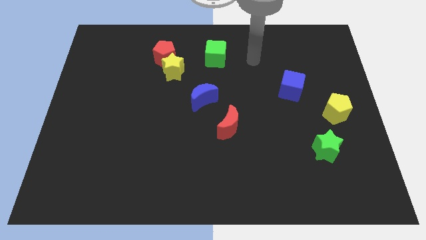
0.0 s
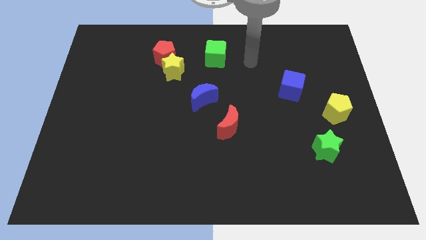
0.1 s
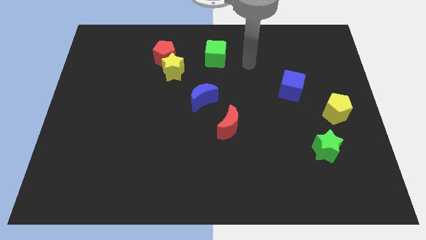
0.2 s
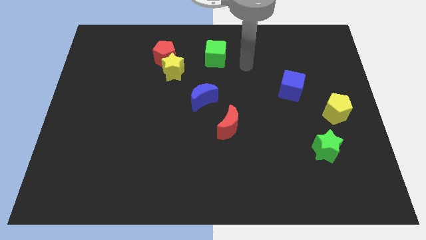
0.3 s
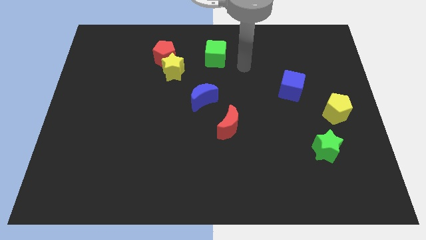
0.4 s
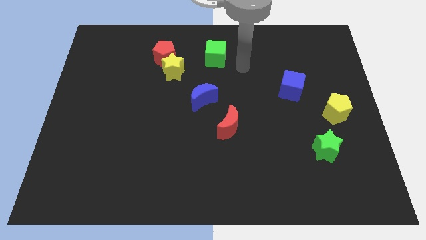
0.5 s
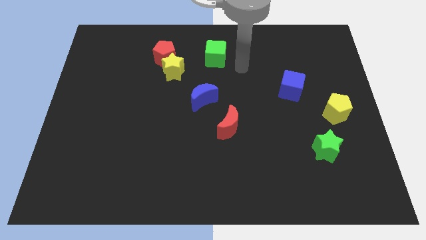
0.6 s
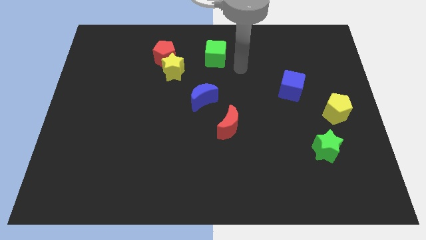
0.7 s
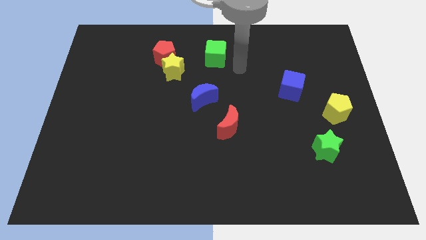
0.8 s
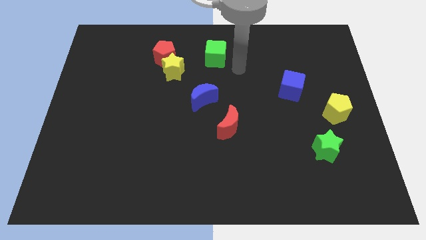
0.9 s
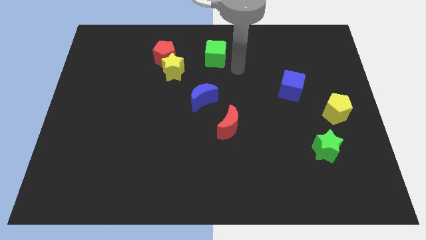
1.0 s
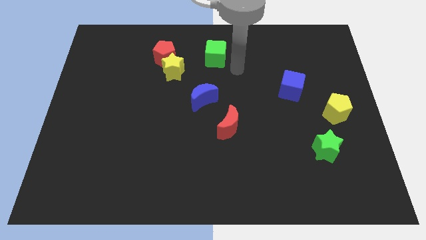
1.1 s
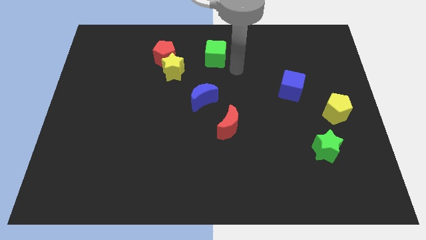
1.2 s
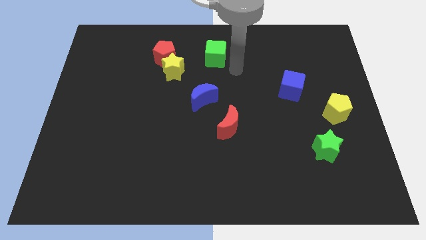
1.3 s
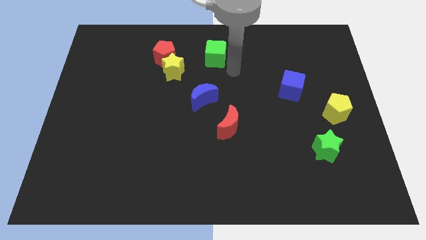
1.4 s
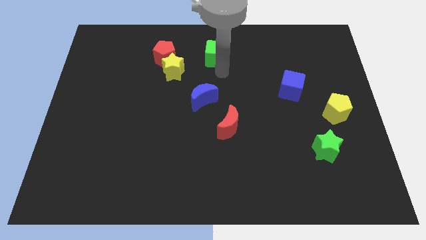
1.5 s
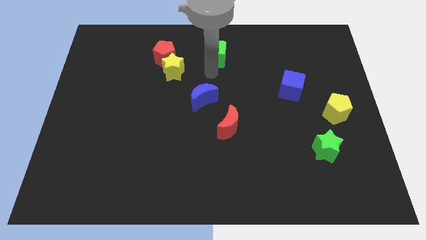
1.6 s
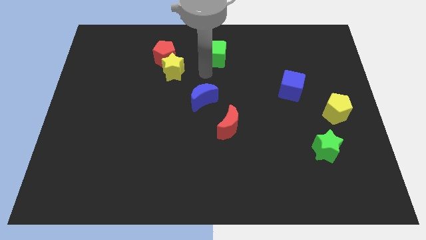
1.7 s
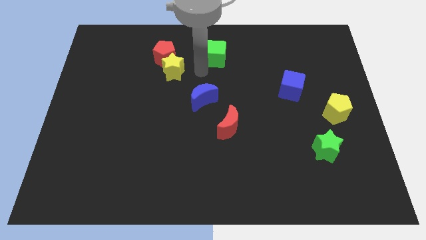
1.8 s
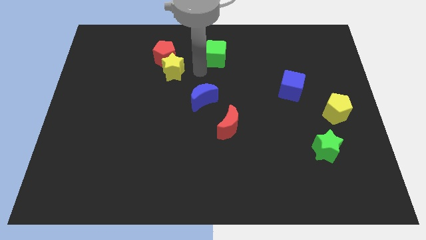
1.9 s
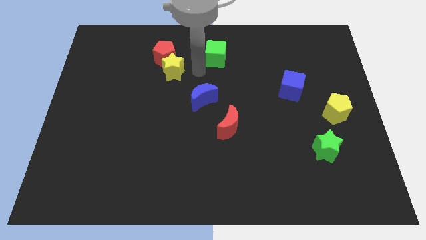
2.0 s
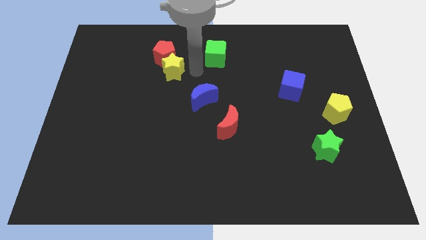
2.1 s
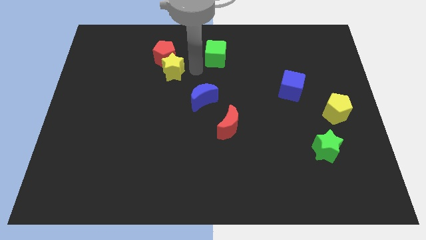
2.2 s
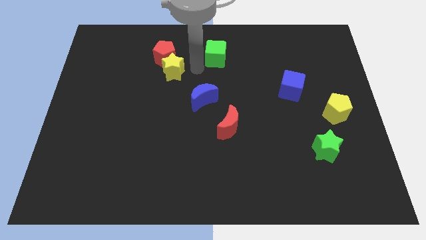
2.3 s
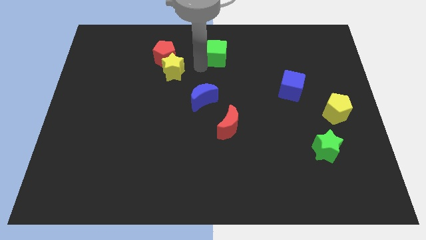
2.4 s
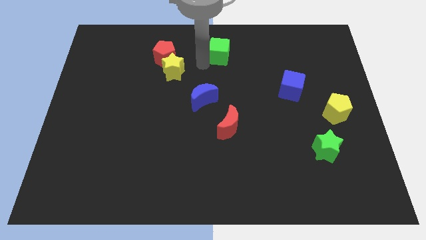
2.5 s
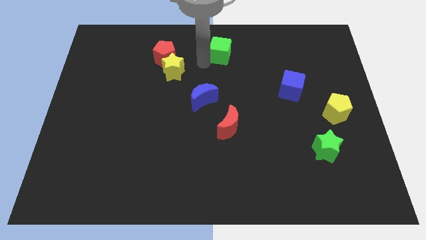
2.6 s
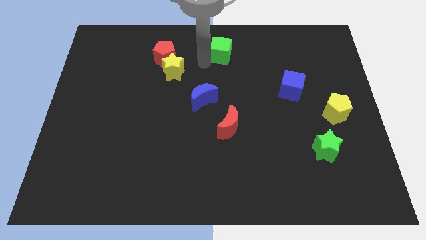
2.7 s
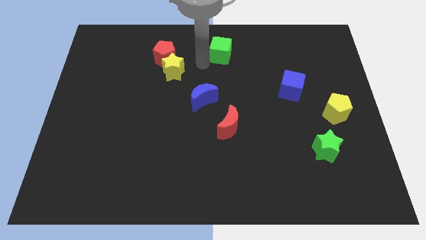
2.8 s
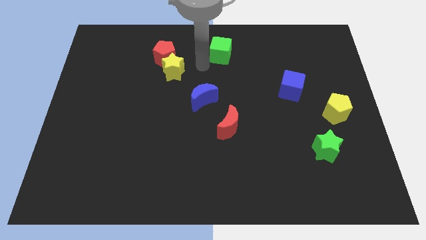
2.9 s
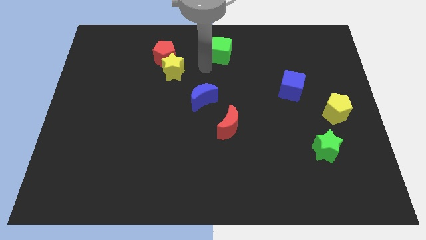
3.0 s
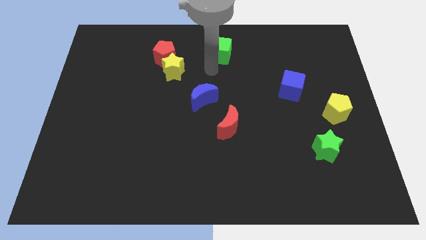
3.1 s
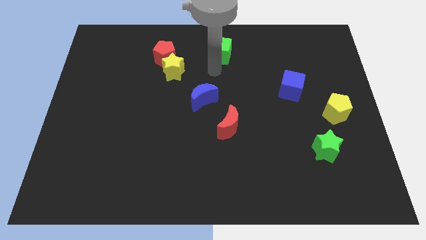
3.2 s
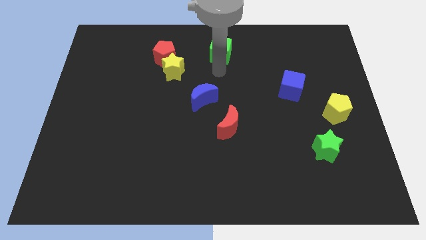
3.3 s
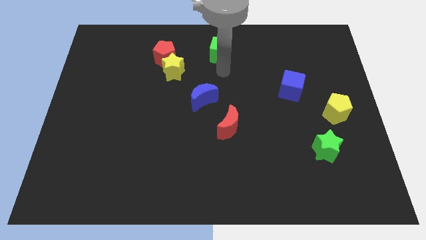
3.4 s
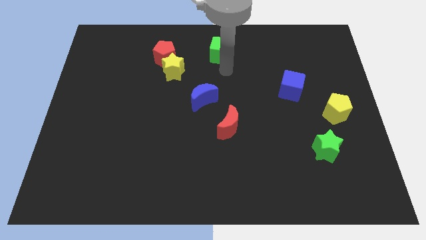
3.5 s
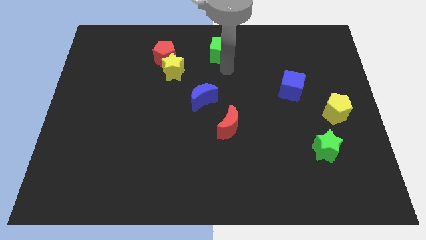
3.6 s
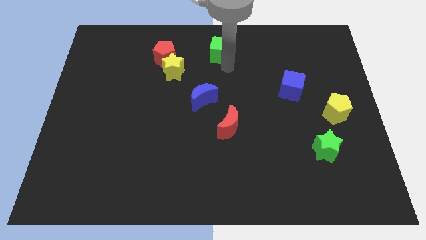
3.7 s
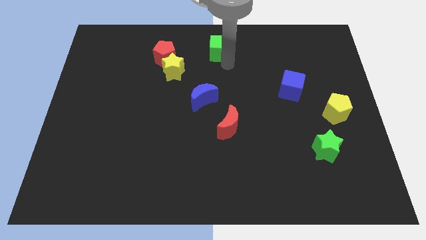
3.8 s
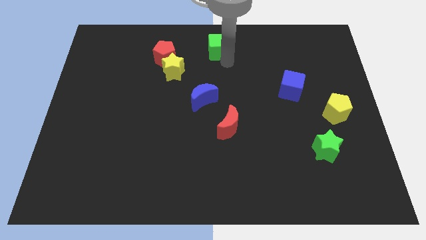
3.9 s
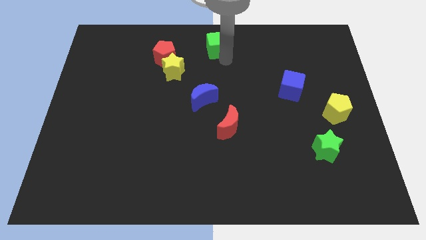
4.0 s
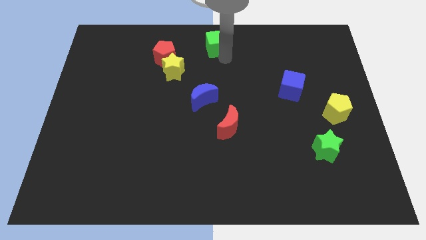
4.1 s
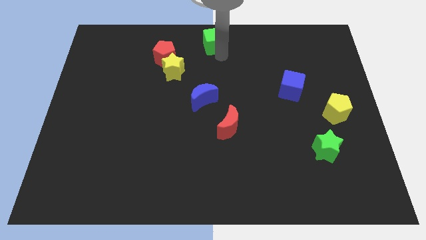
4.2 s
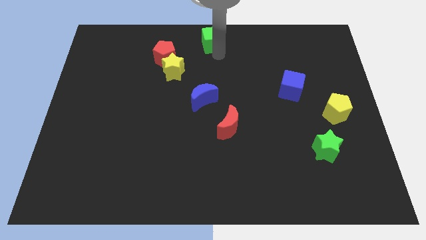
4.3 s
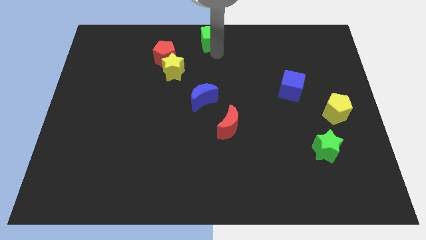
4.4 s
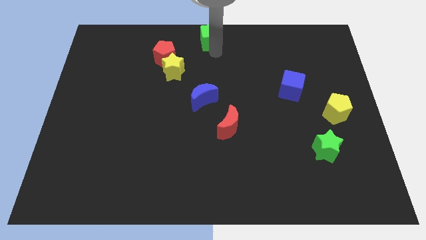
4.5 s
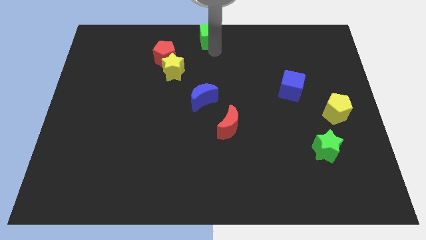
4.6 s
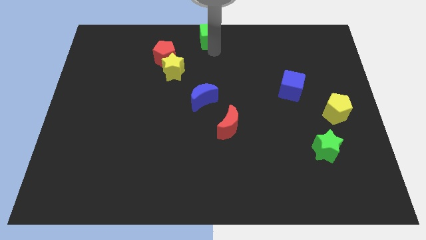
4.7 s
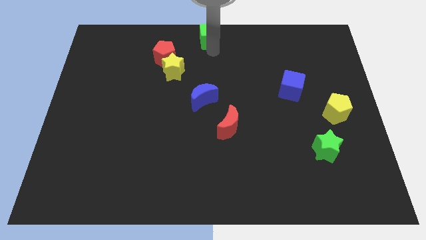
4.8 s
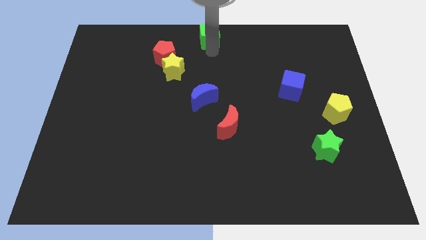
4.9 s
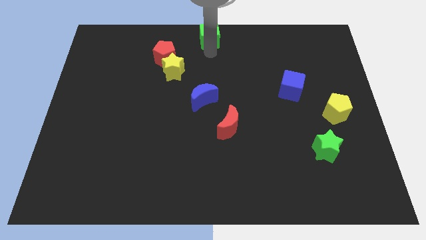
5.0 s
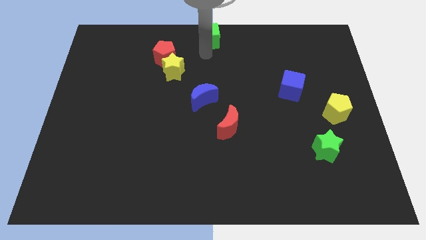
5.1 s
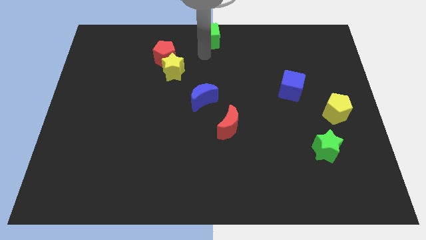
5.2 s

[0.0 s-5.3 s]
push the green cube to the top center of the board

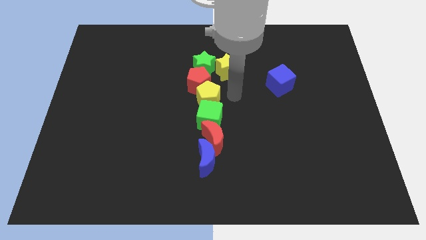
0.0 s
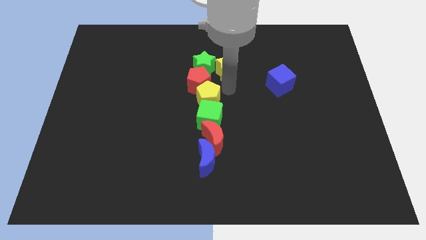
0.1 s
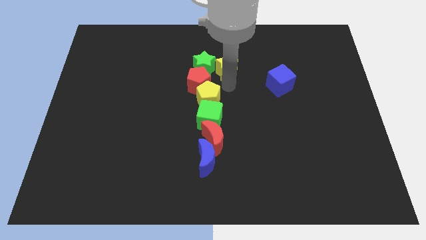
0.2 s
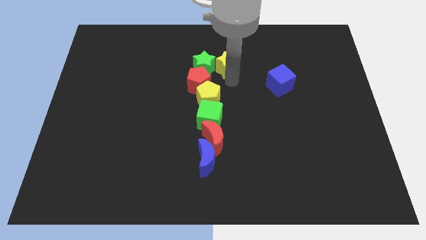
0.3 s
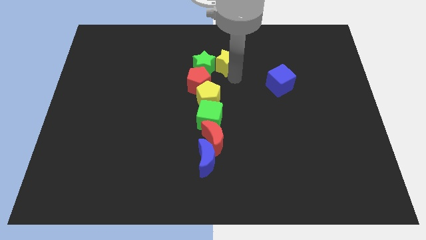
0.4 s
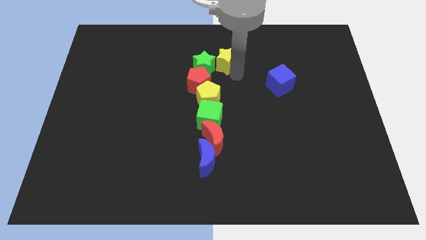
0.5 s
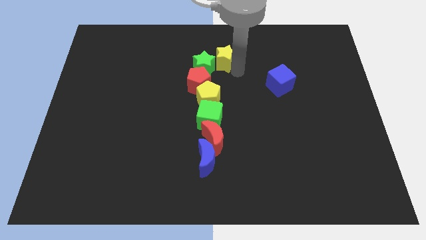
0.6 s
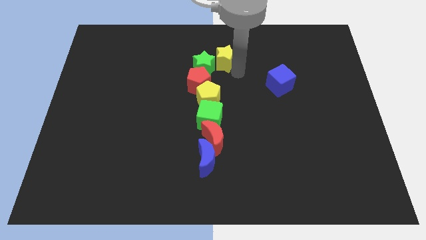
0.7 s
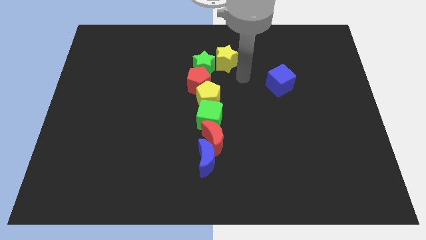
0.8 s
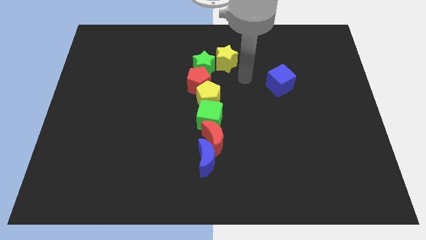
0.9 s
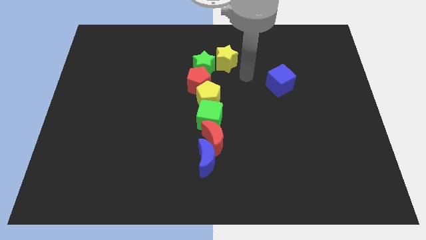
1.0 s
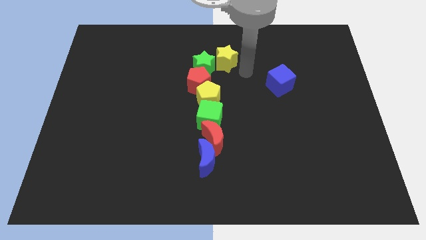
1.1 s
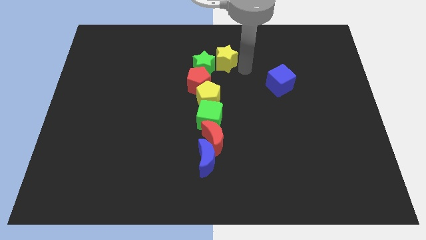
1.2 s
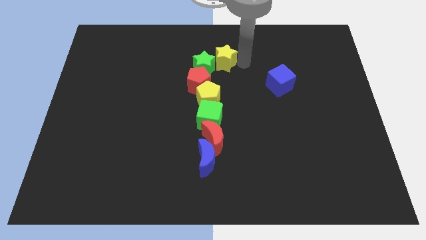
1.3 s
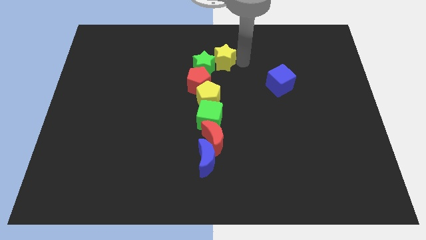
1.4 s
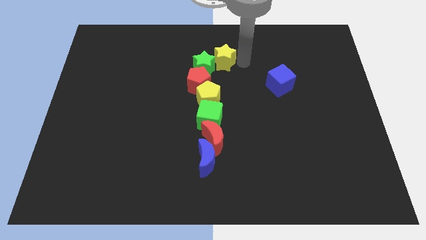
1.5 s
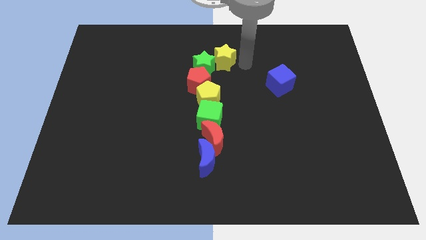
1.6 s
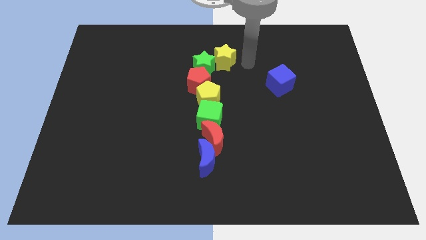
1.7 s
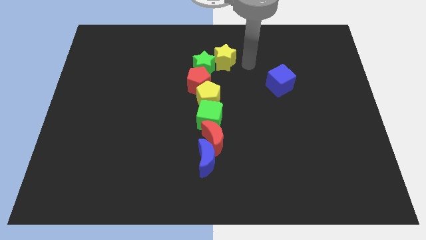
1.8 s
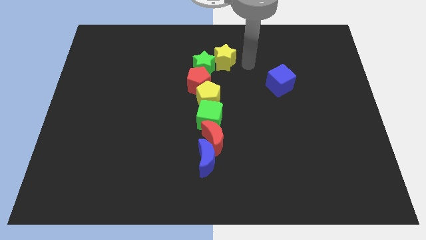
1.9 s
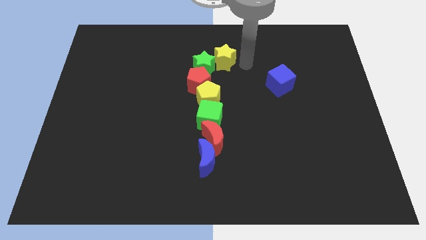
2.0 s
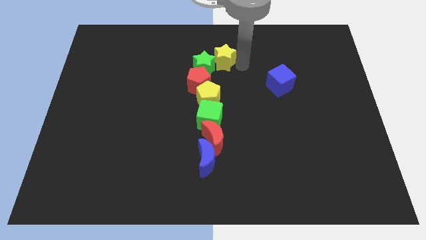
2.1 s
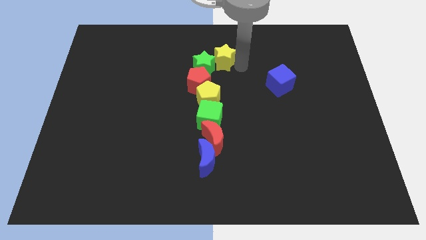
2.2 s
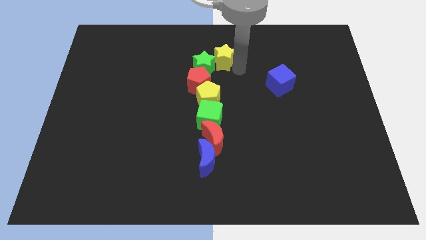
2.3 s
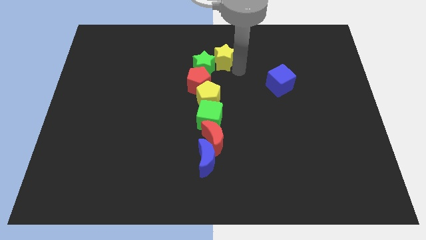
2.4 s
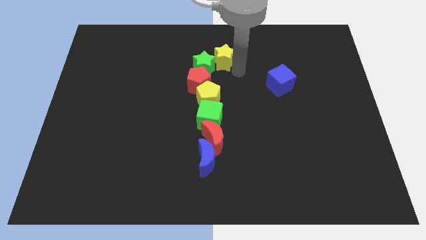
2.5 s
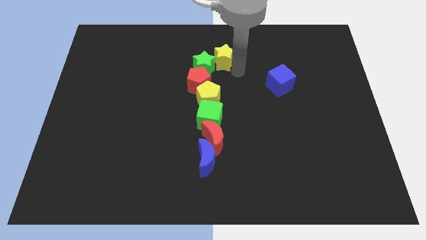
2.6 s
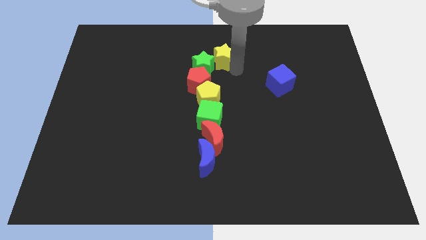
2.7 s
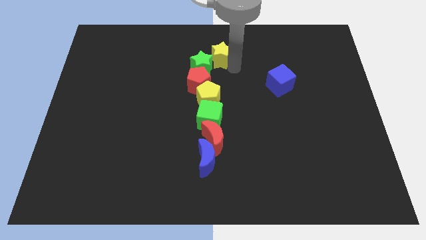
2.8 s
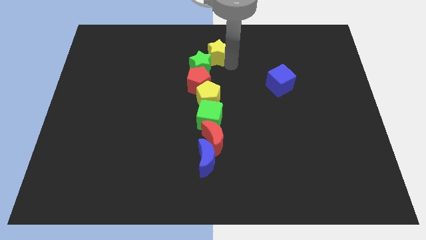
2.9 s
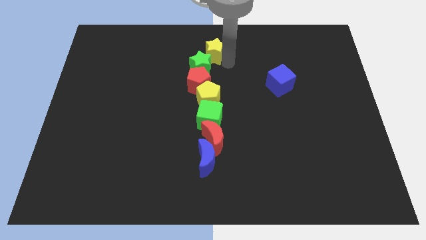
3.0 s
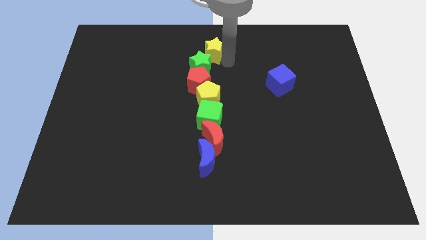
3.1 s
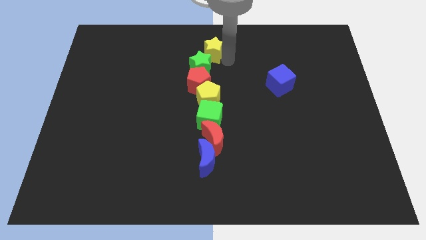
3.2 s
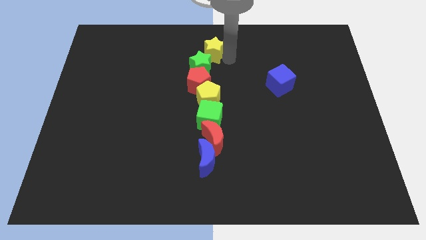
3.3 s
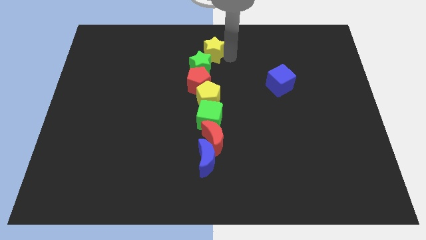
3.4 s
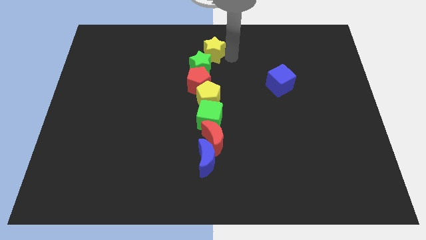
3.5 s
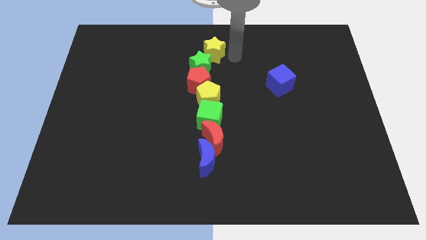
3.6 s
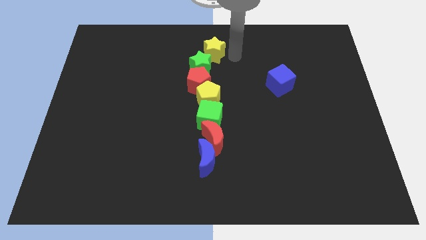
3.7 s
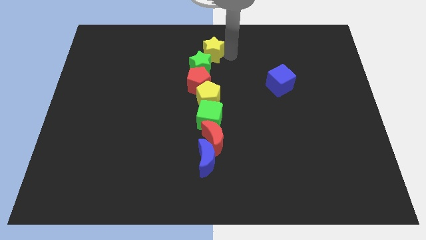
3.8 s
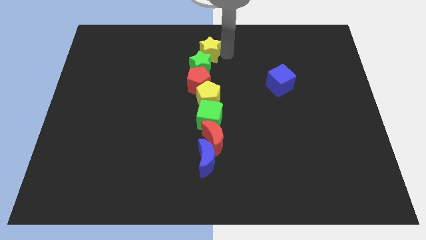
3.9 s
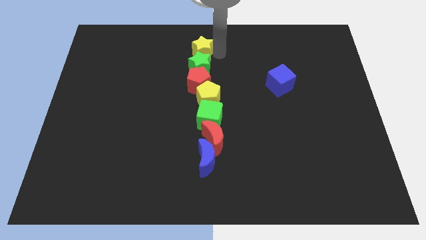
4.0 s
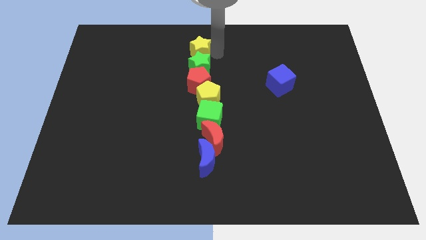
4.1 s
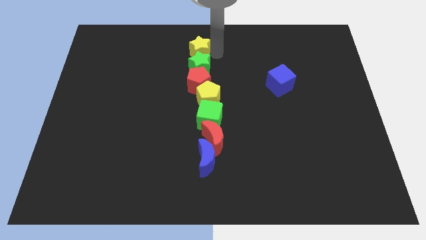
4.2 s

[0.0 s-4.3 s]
place the yellow star above the green star
